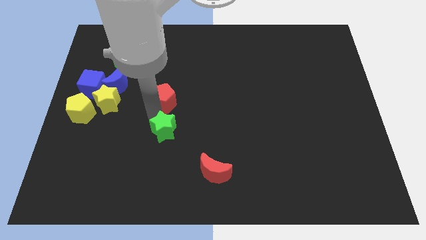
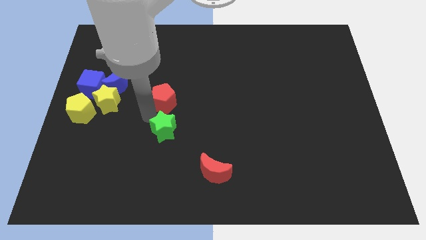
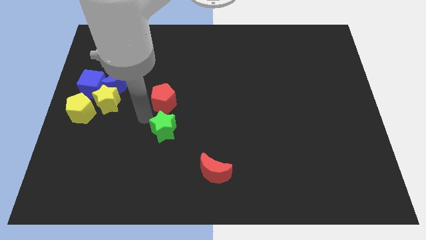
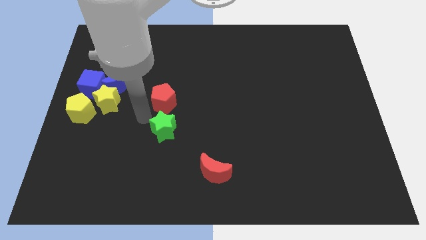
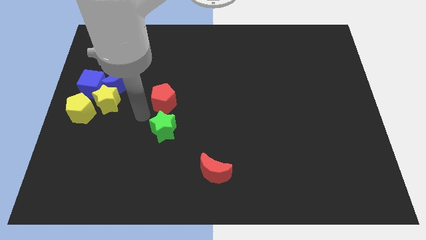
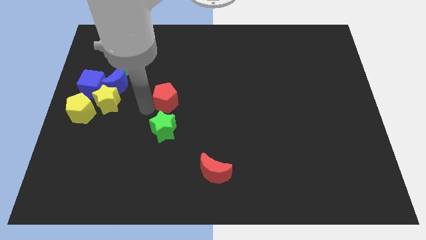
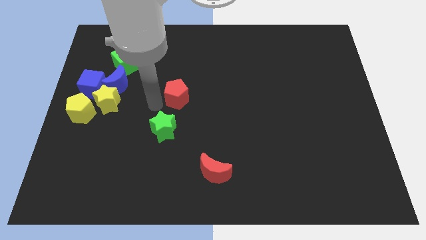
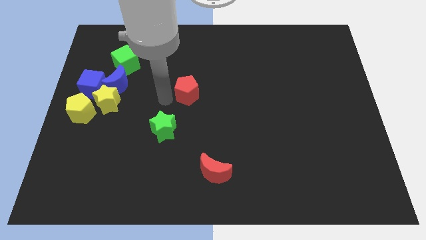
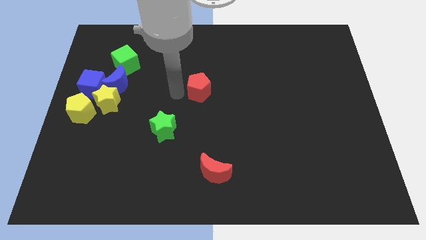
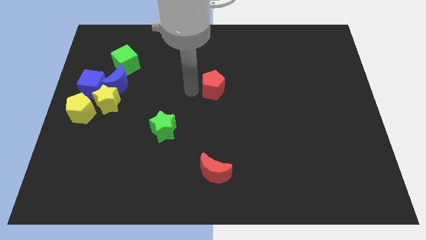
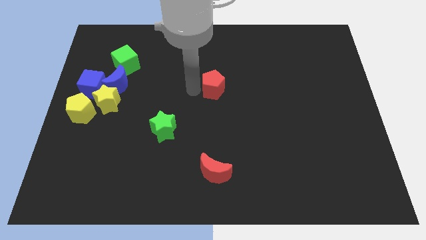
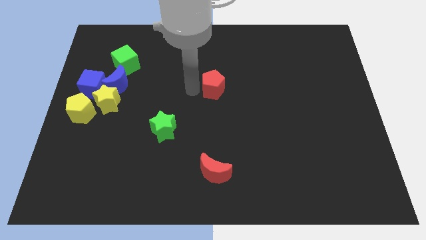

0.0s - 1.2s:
place the red pentagon to the center of the board

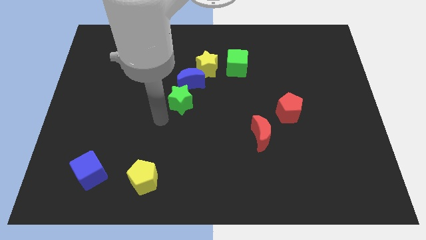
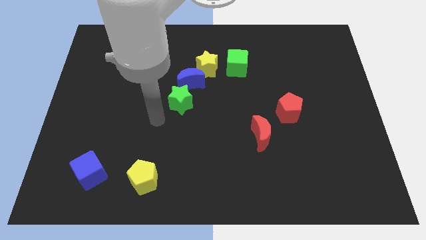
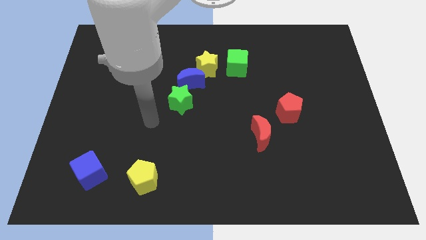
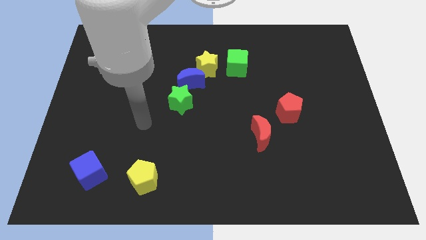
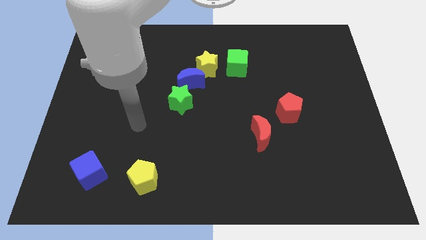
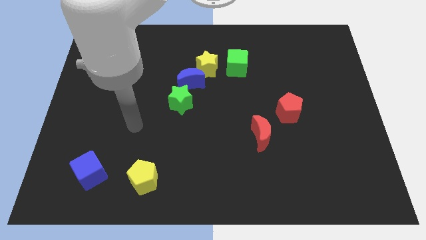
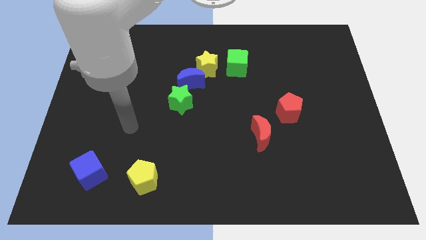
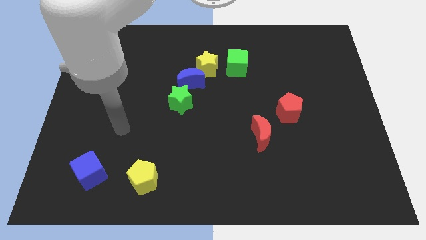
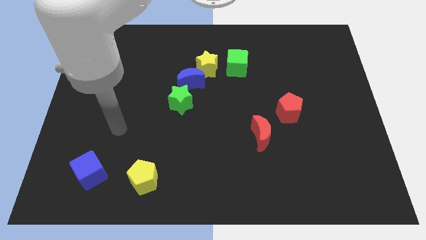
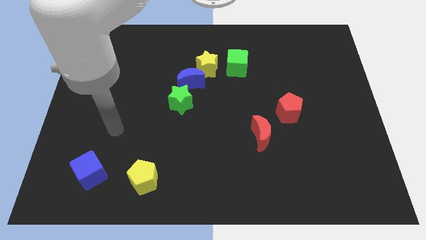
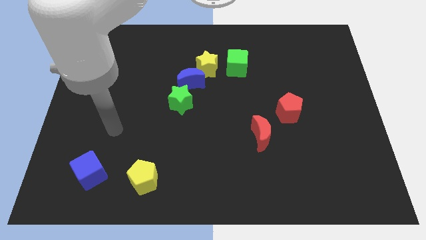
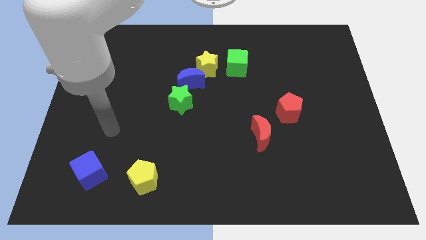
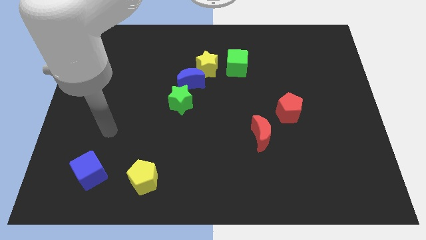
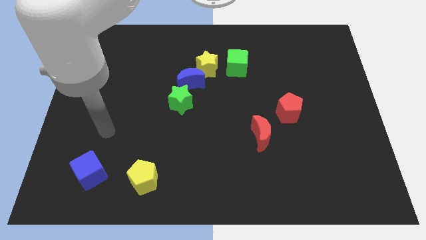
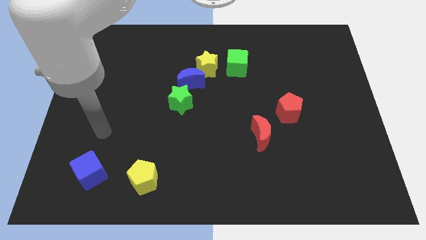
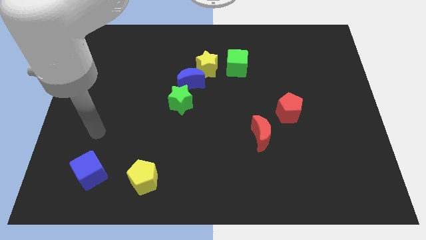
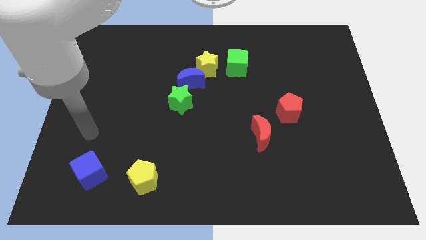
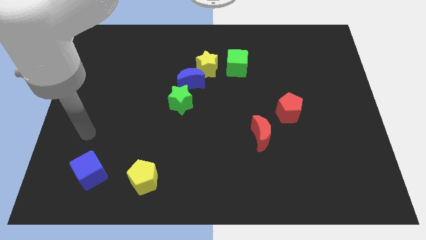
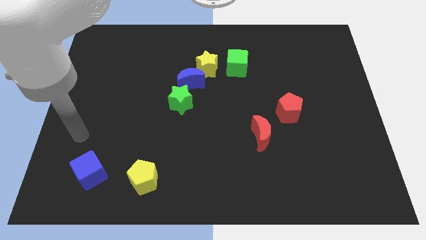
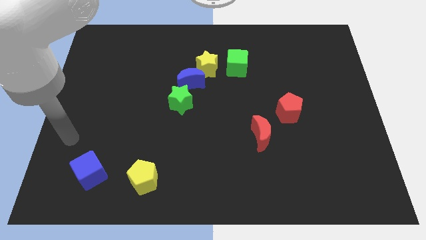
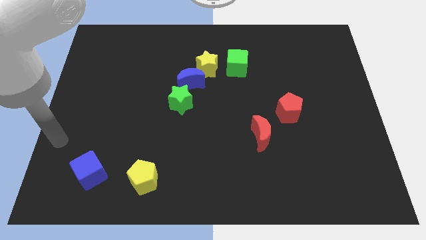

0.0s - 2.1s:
point your arm at the top left side of the blue cube

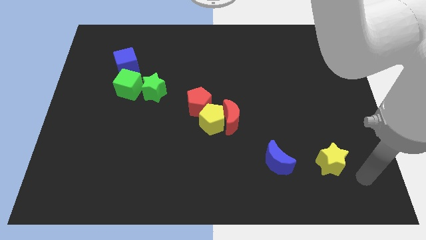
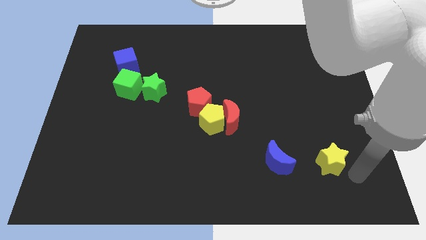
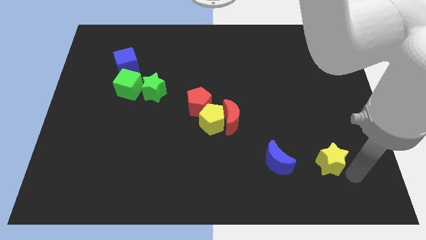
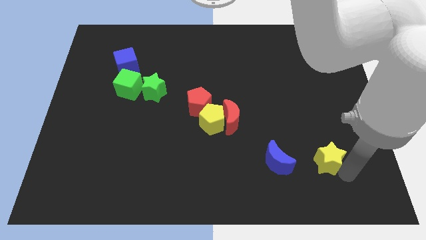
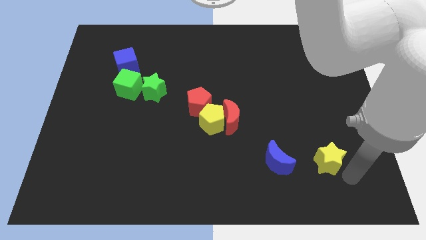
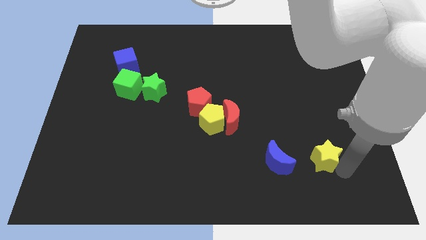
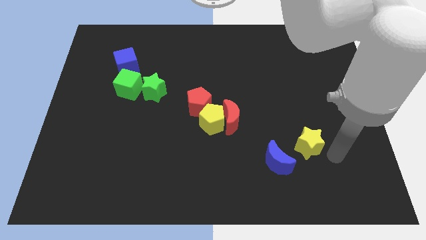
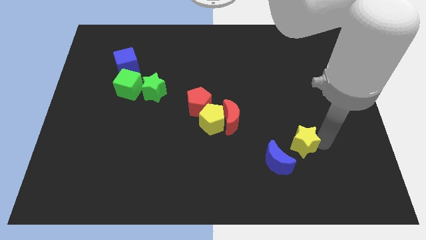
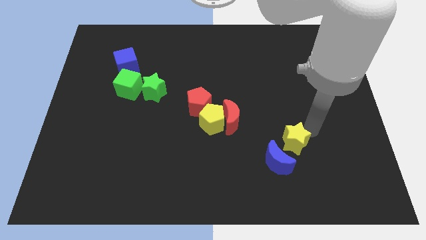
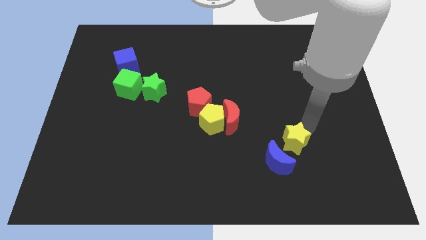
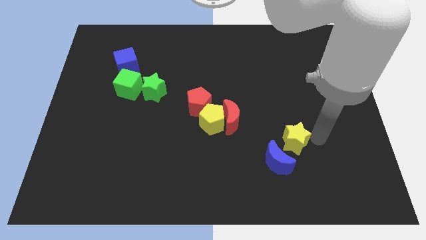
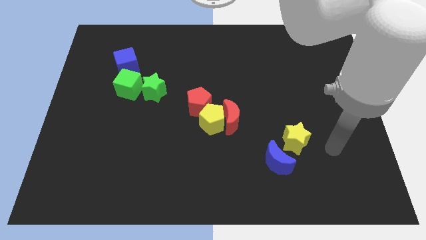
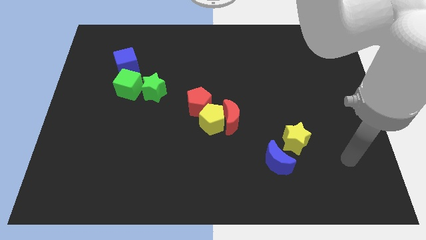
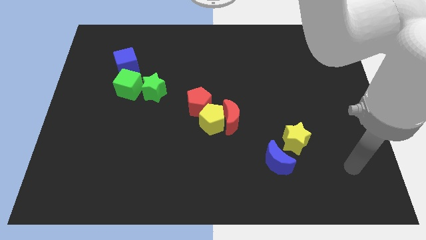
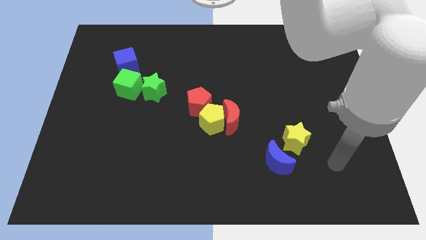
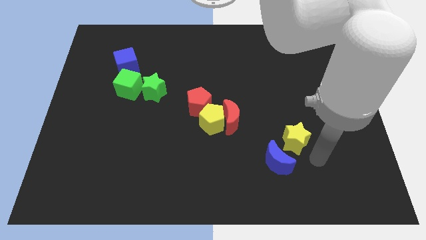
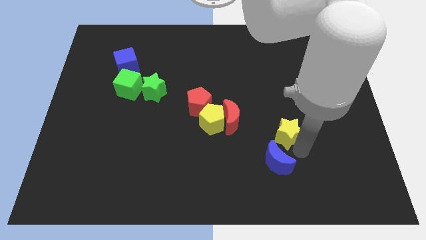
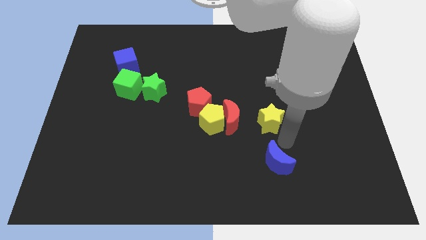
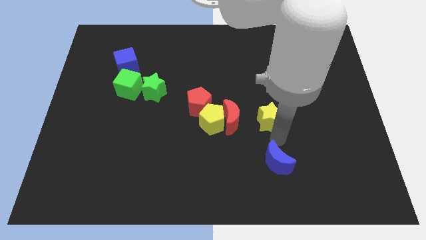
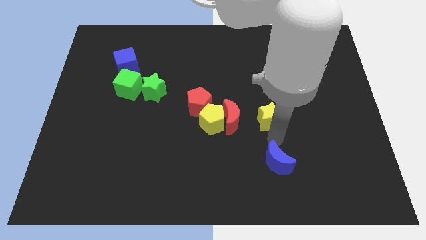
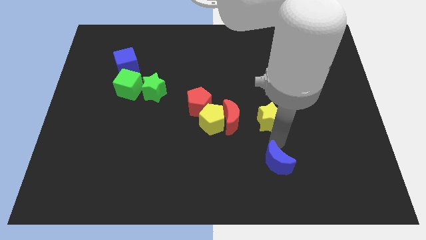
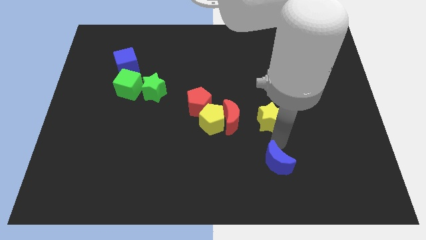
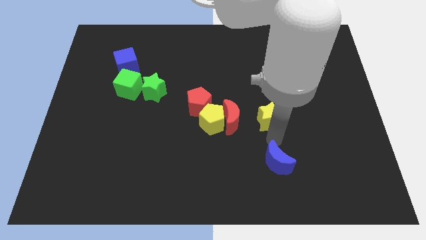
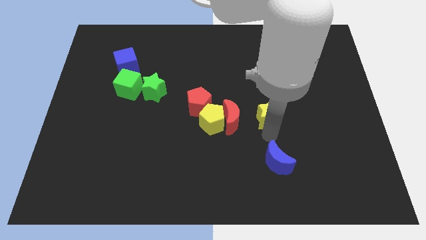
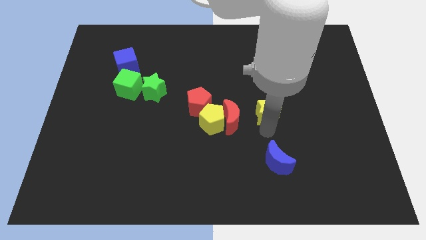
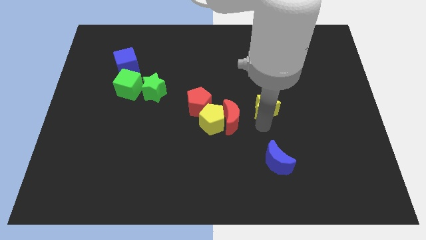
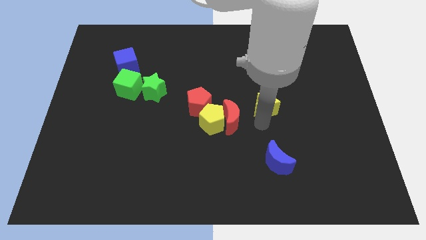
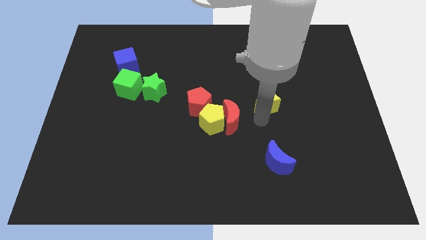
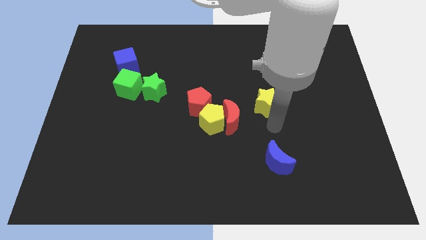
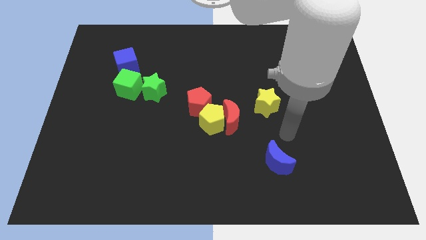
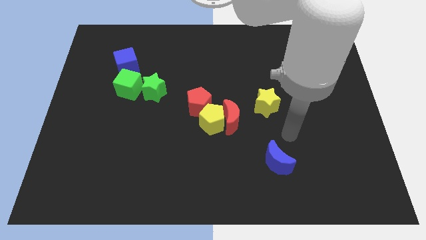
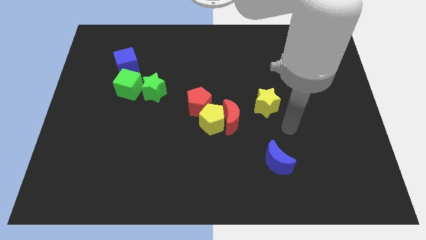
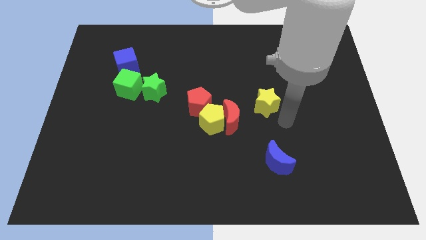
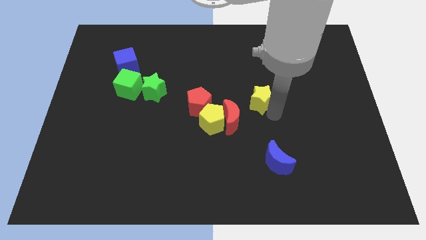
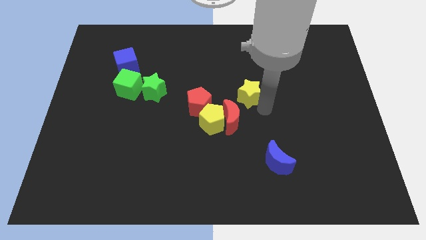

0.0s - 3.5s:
push the yellow star to the center

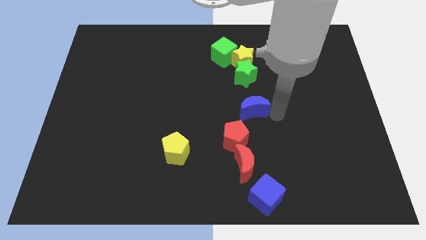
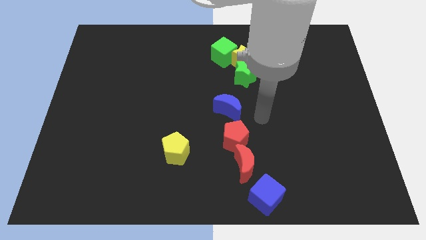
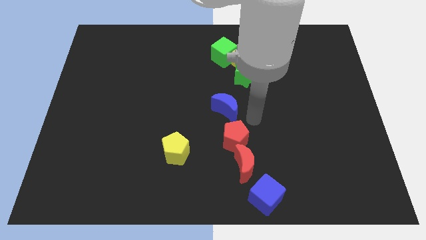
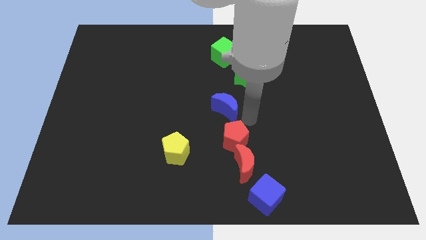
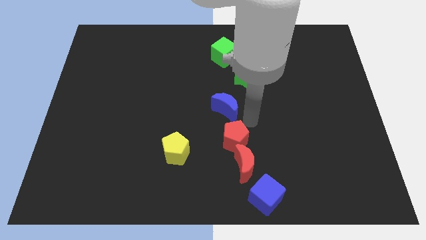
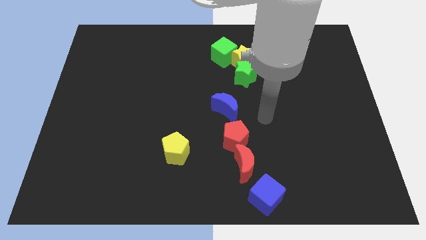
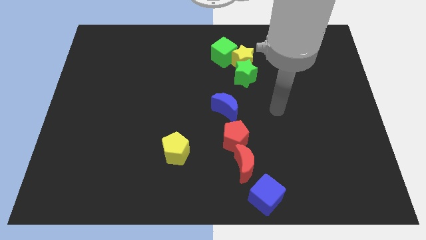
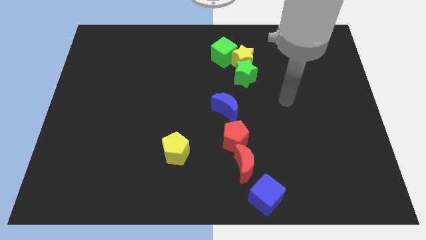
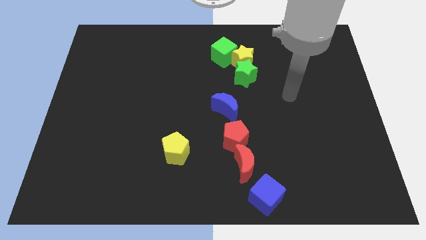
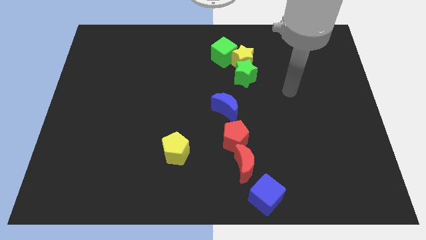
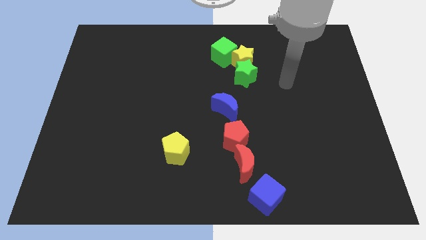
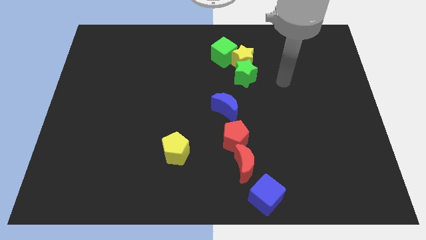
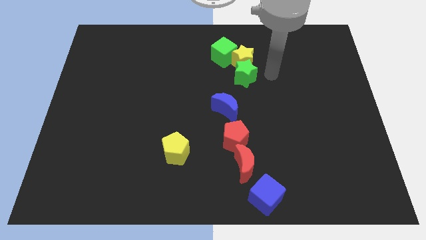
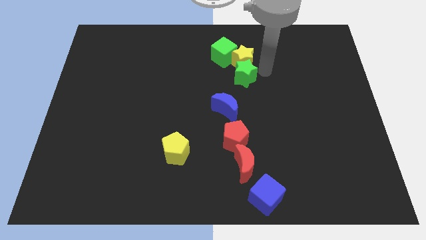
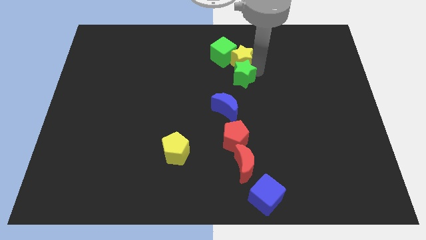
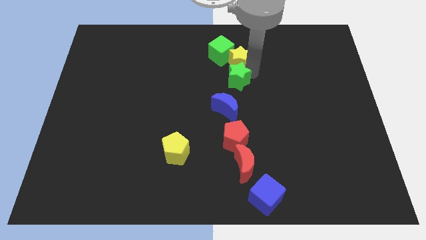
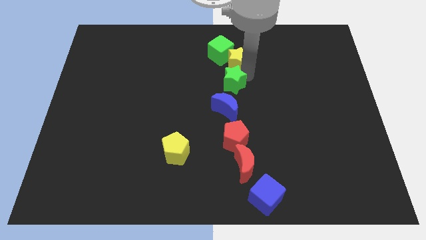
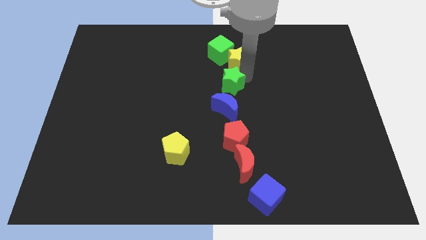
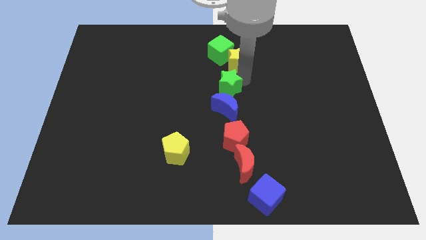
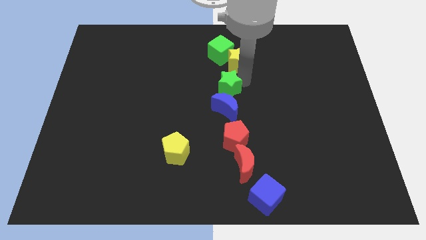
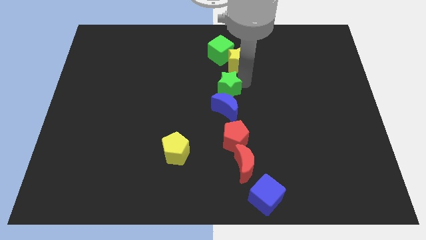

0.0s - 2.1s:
place the green star above the blue crescent forming vertical line of the blocks except the yellow pentagon

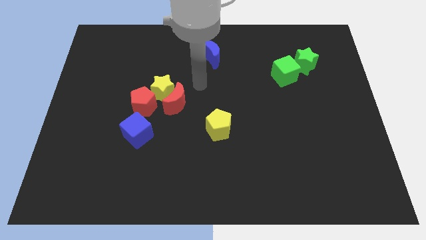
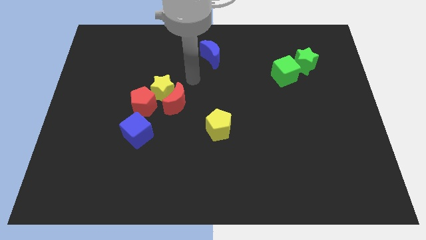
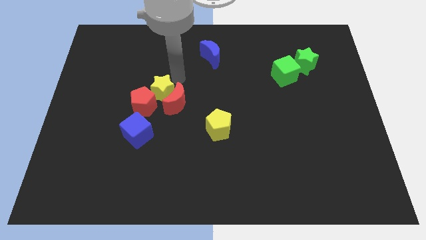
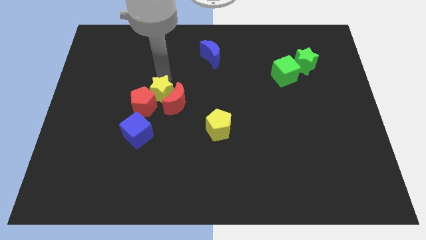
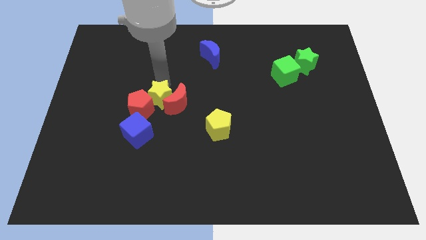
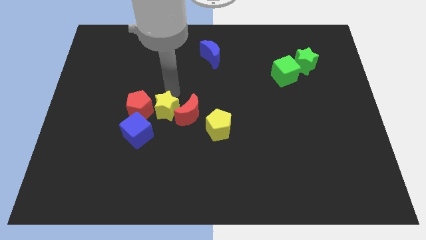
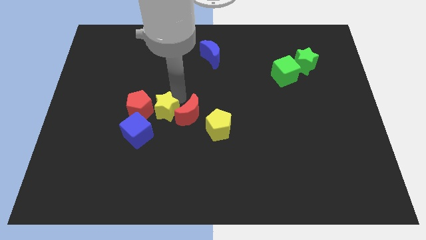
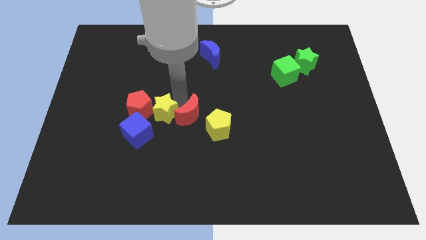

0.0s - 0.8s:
place the yellow star in between red pentagon and red moon
